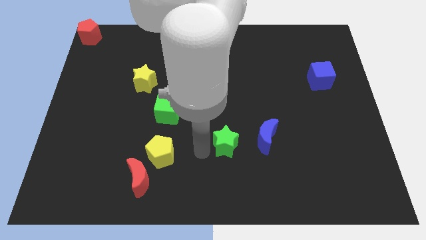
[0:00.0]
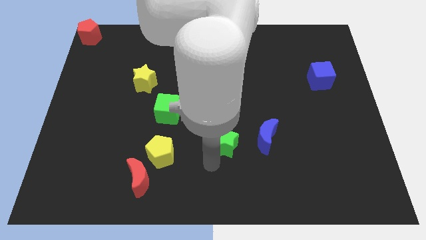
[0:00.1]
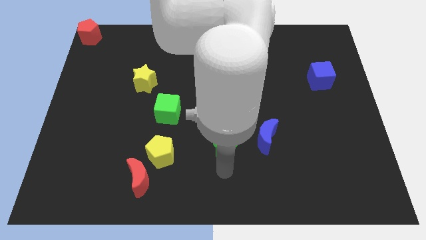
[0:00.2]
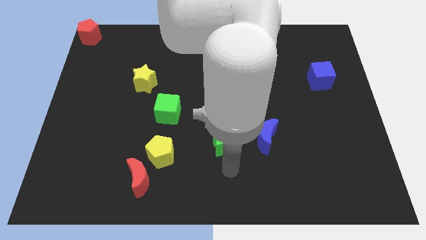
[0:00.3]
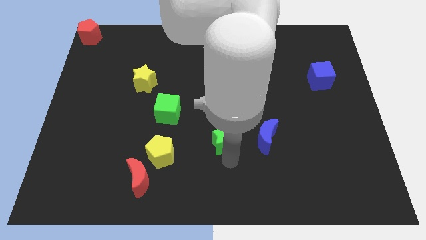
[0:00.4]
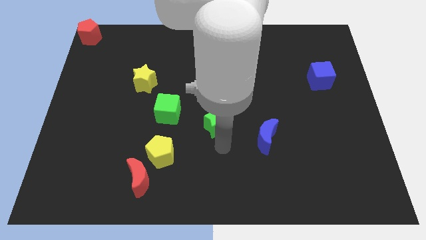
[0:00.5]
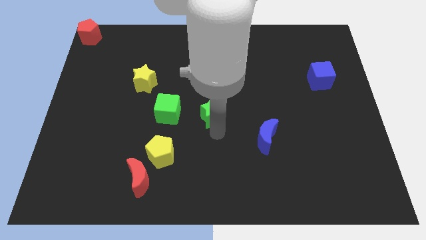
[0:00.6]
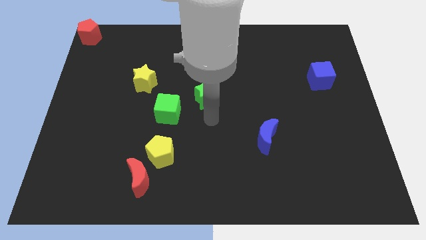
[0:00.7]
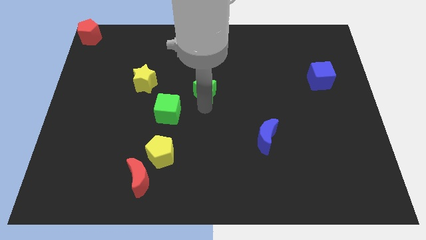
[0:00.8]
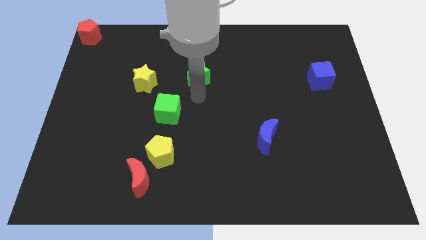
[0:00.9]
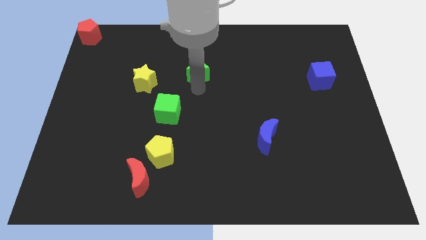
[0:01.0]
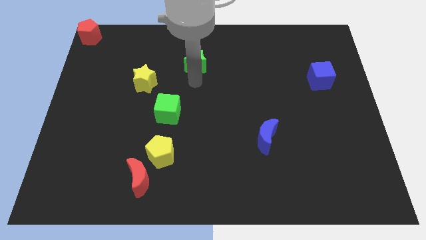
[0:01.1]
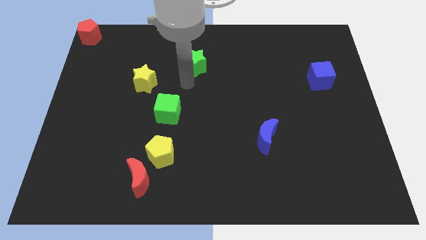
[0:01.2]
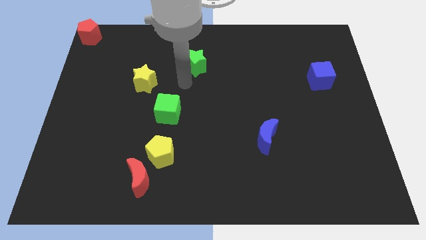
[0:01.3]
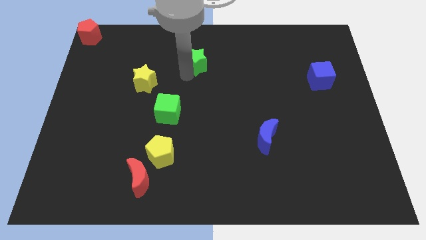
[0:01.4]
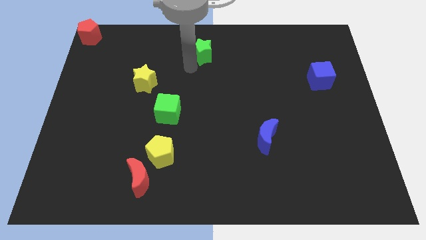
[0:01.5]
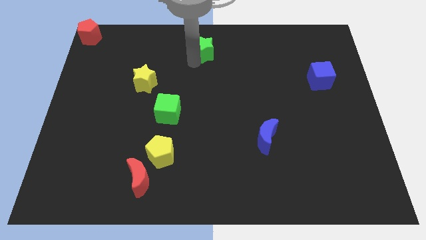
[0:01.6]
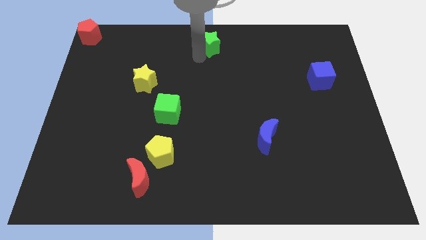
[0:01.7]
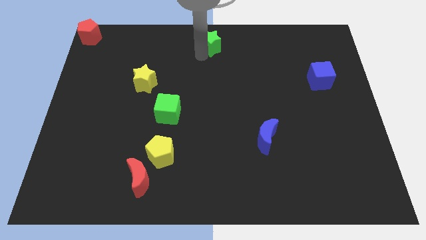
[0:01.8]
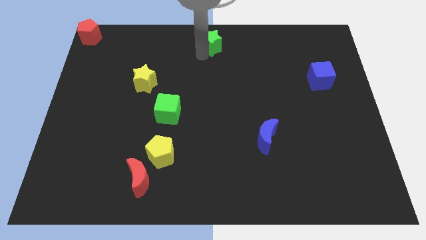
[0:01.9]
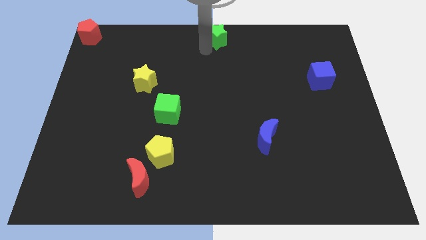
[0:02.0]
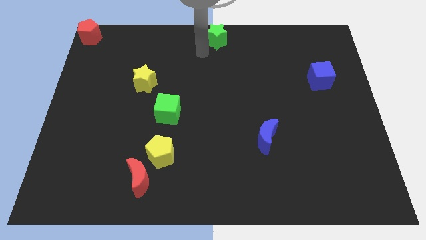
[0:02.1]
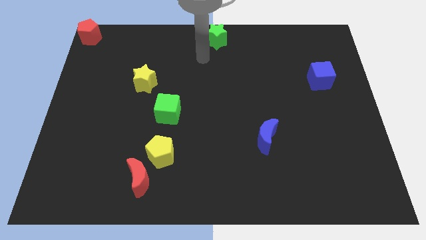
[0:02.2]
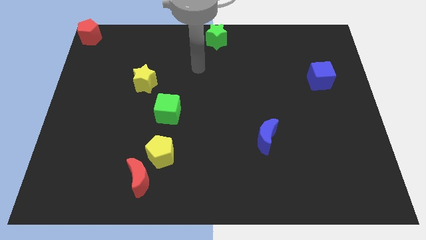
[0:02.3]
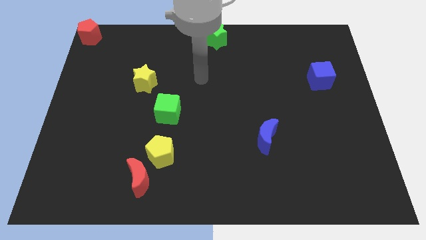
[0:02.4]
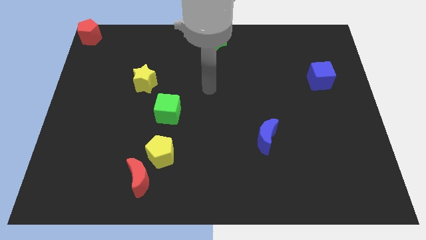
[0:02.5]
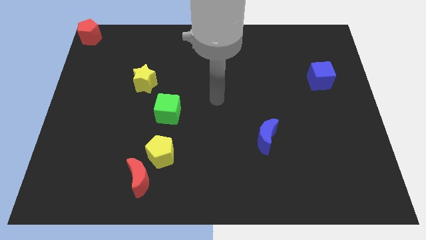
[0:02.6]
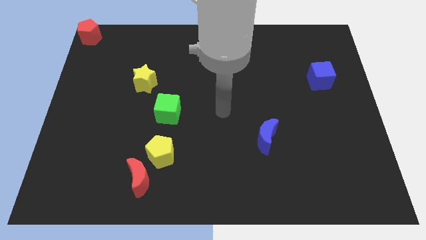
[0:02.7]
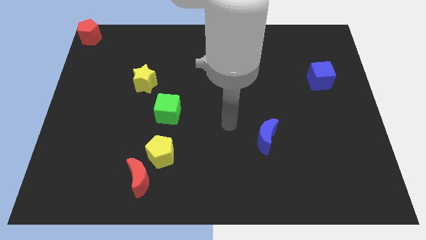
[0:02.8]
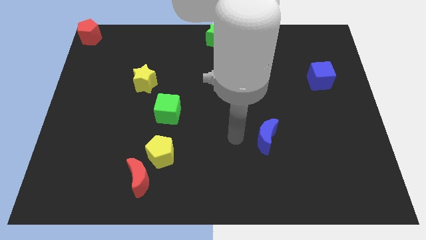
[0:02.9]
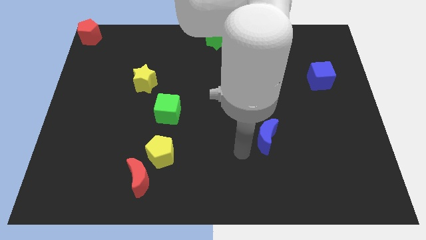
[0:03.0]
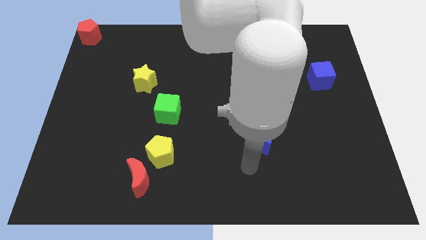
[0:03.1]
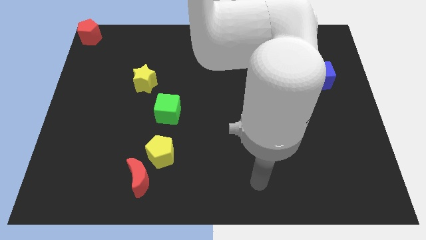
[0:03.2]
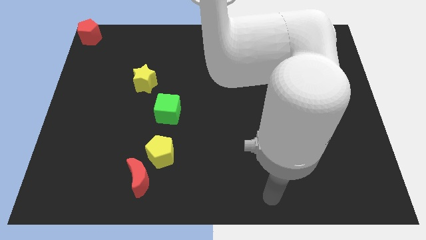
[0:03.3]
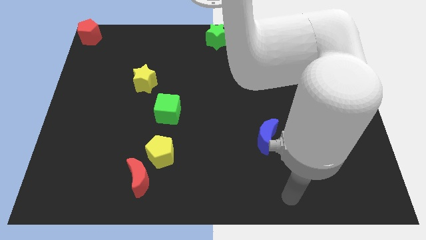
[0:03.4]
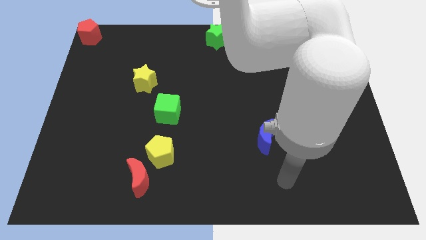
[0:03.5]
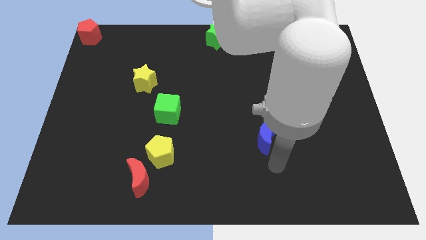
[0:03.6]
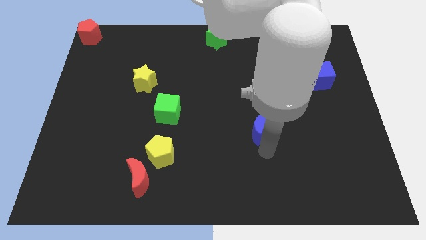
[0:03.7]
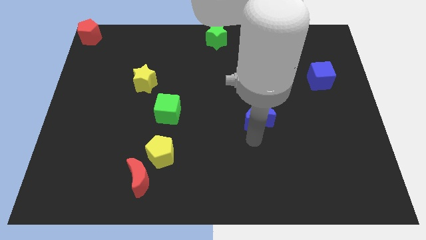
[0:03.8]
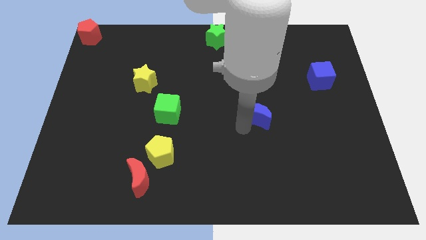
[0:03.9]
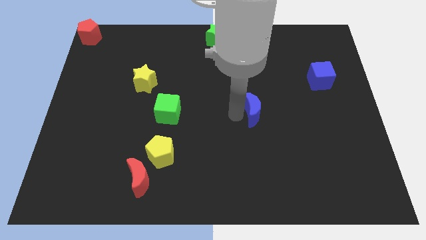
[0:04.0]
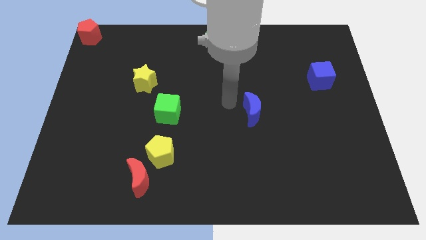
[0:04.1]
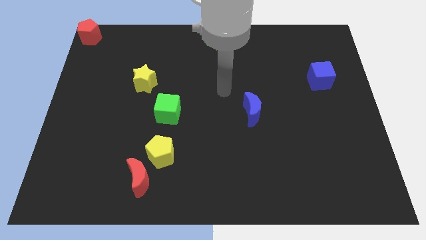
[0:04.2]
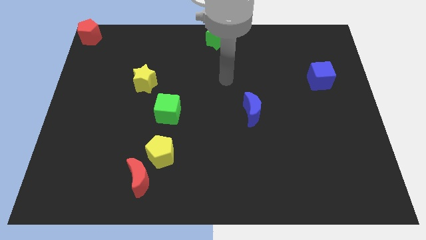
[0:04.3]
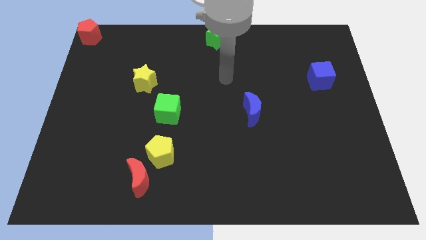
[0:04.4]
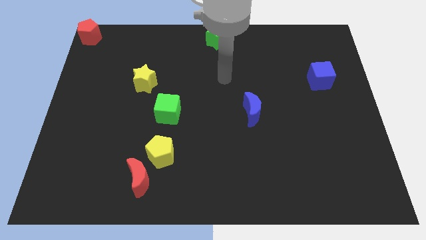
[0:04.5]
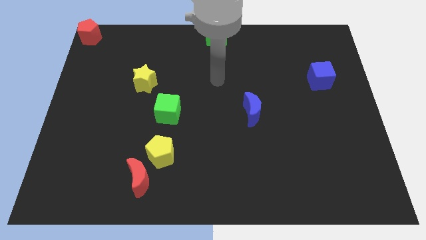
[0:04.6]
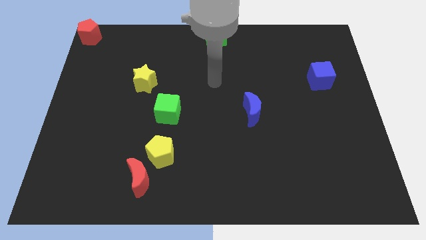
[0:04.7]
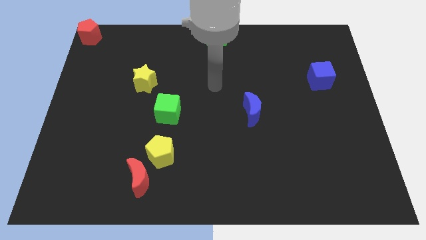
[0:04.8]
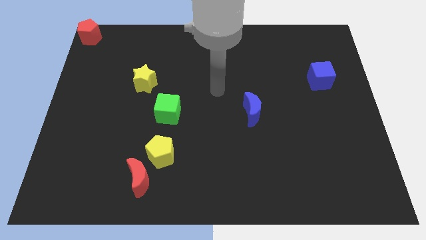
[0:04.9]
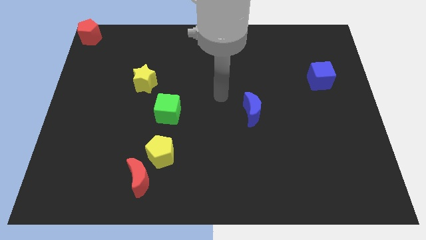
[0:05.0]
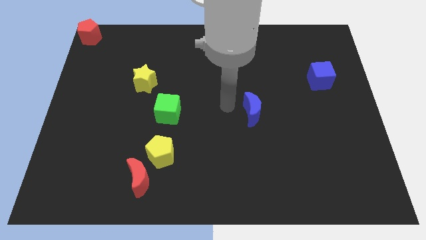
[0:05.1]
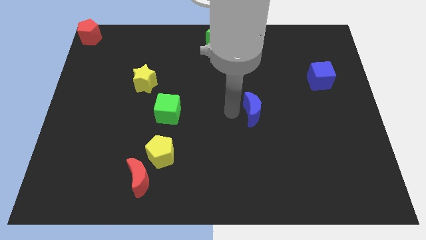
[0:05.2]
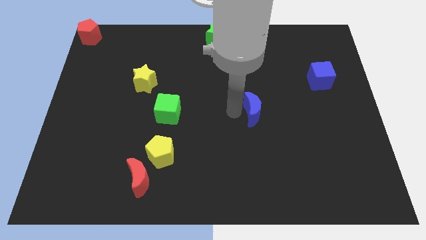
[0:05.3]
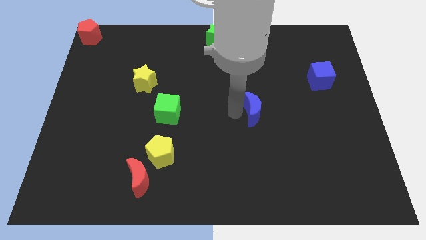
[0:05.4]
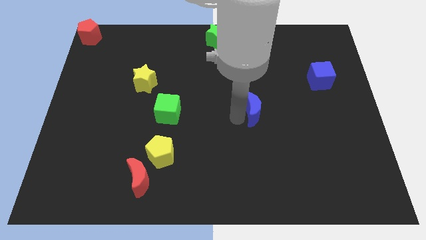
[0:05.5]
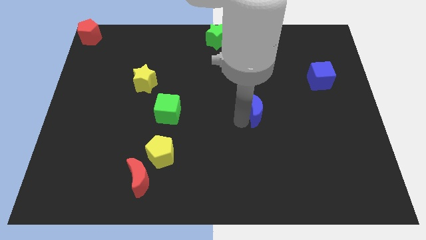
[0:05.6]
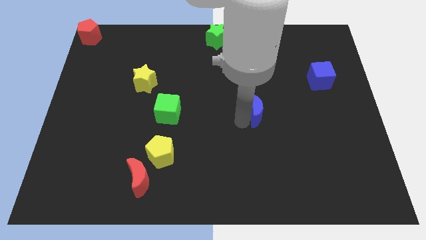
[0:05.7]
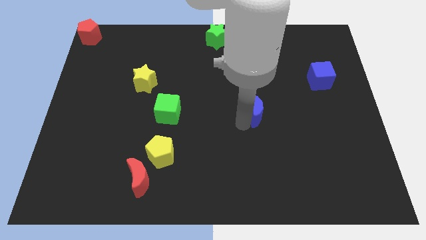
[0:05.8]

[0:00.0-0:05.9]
push the green star towards the top center side of the board

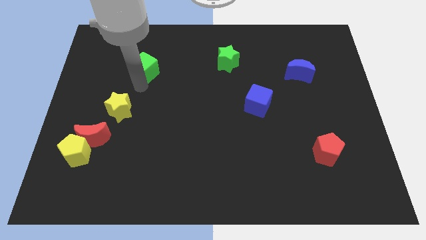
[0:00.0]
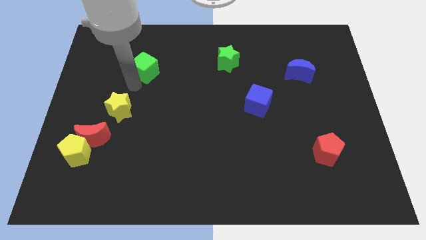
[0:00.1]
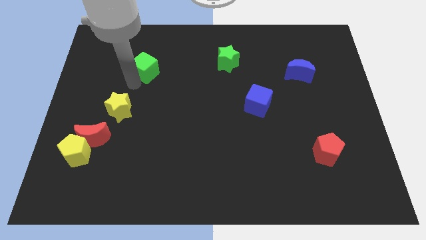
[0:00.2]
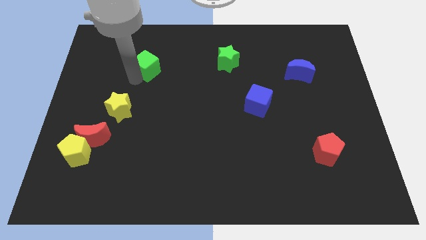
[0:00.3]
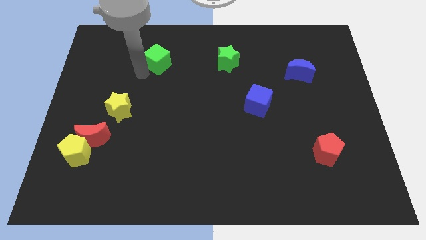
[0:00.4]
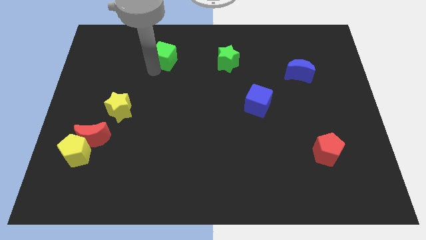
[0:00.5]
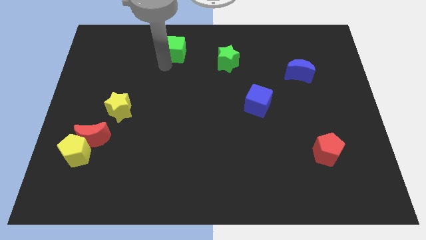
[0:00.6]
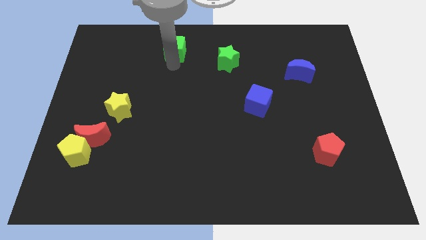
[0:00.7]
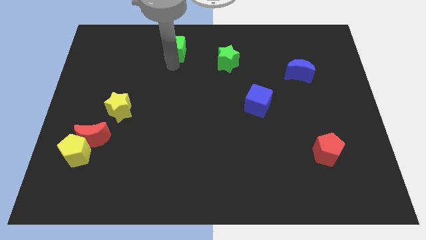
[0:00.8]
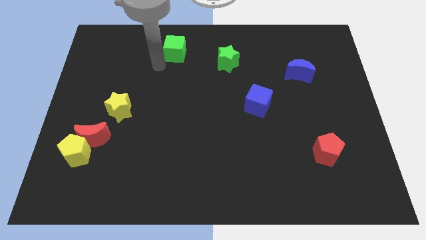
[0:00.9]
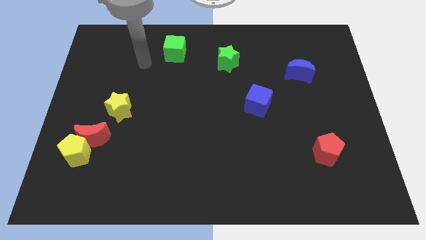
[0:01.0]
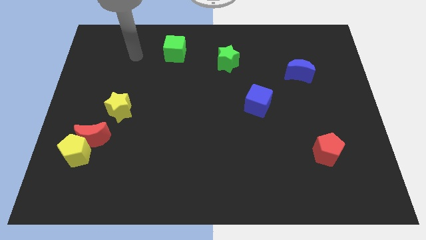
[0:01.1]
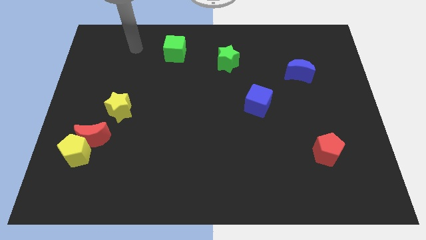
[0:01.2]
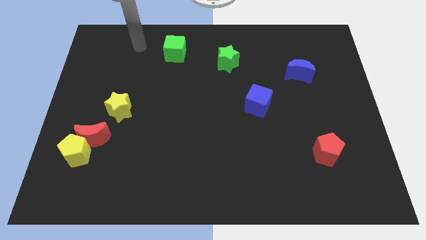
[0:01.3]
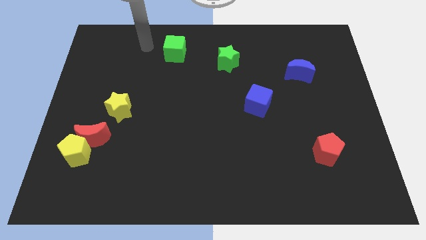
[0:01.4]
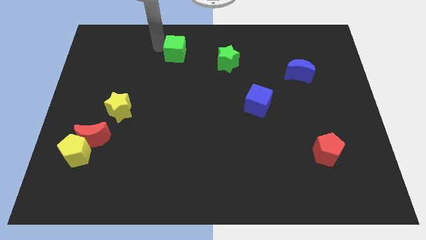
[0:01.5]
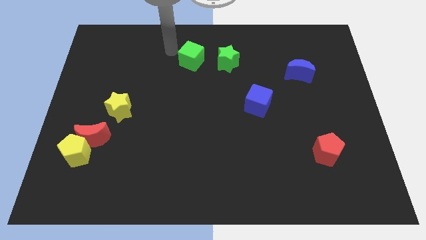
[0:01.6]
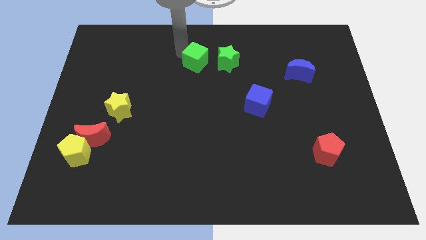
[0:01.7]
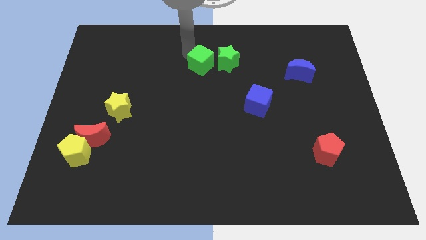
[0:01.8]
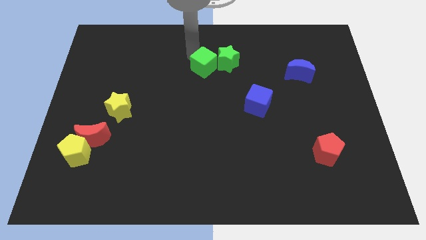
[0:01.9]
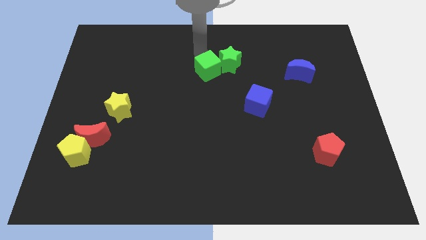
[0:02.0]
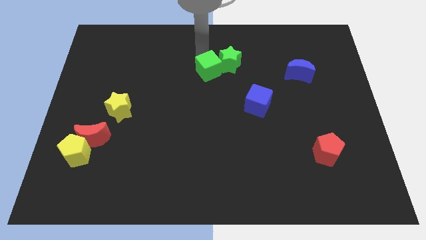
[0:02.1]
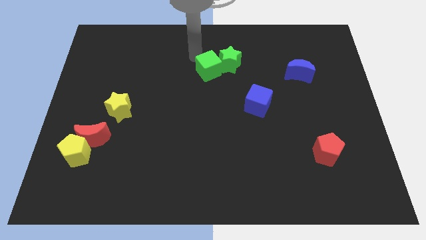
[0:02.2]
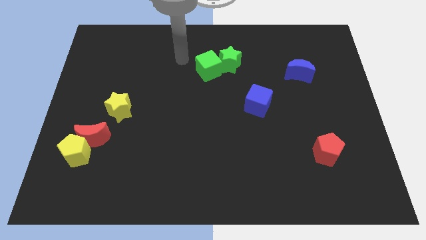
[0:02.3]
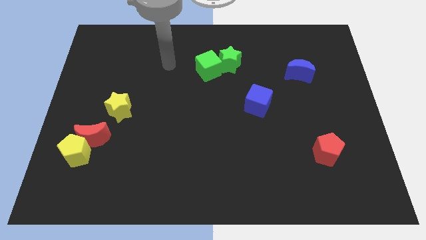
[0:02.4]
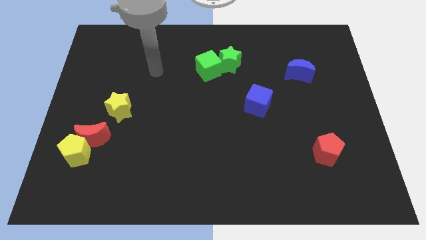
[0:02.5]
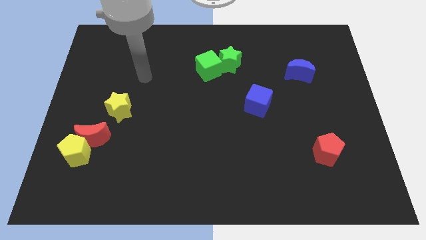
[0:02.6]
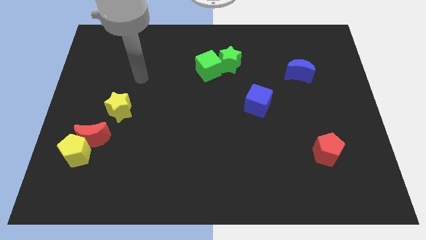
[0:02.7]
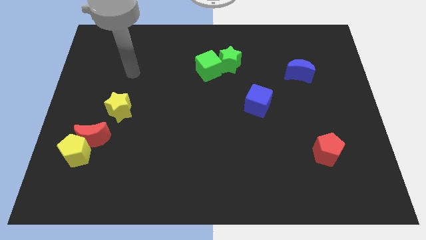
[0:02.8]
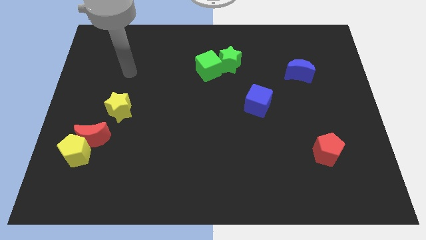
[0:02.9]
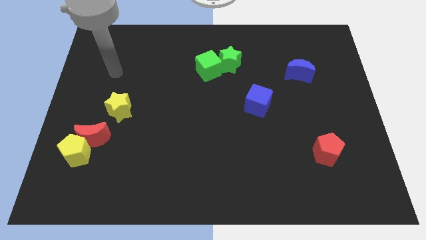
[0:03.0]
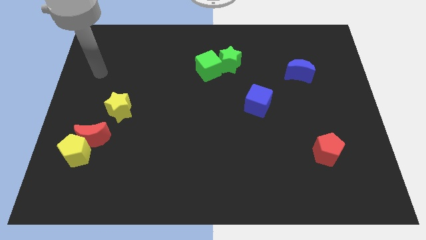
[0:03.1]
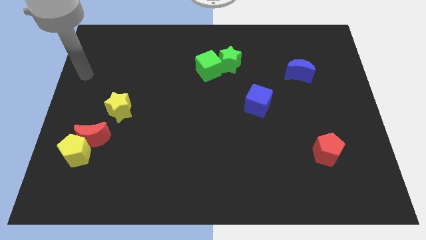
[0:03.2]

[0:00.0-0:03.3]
move the green cube left to the green star
